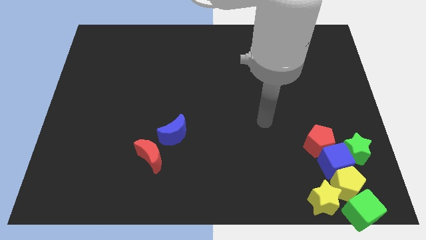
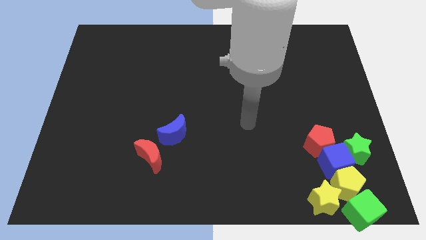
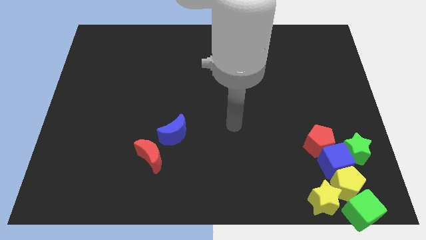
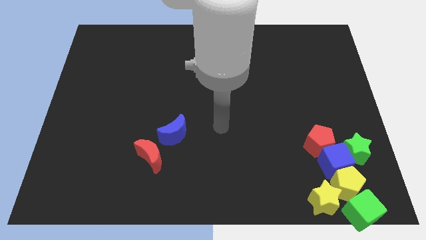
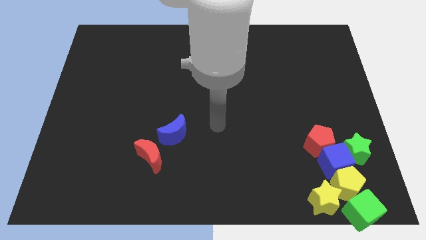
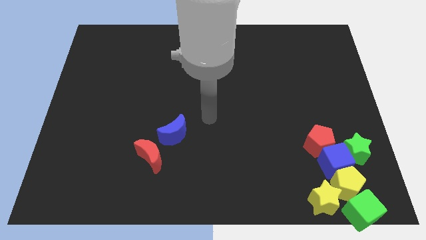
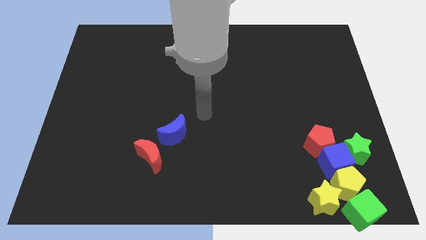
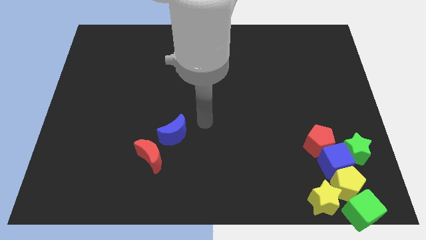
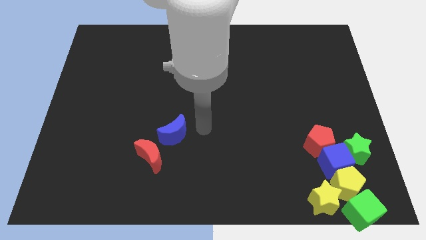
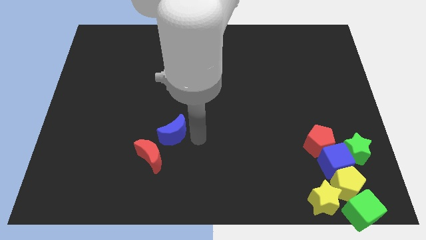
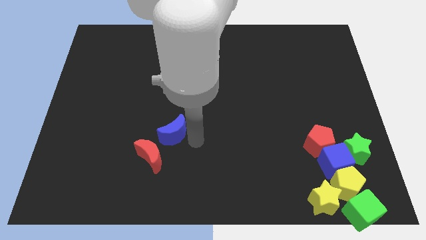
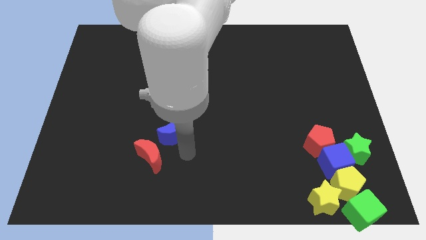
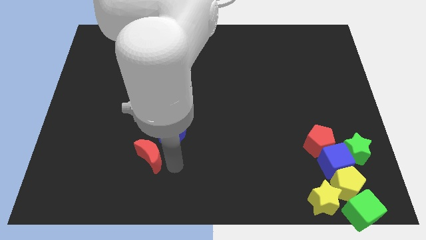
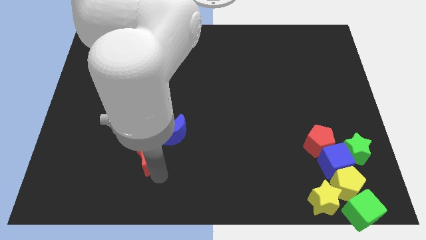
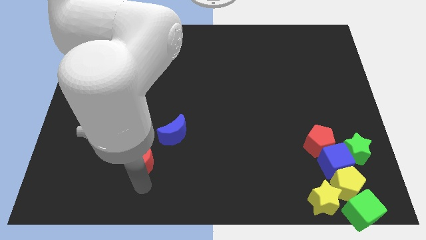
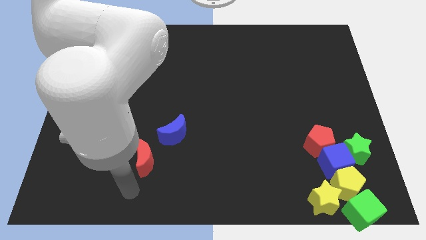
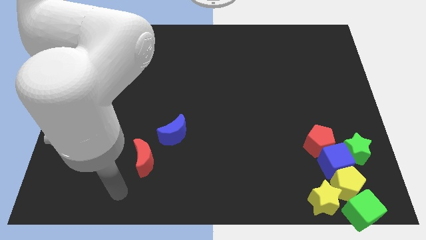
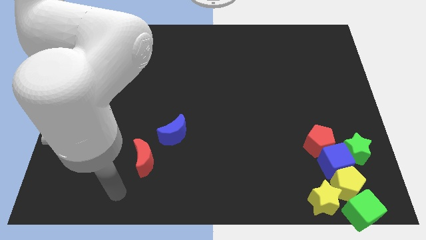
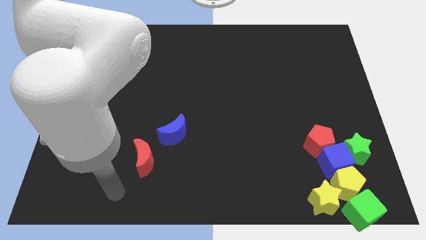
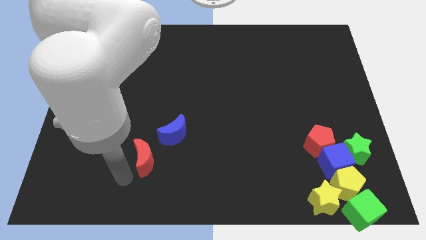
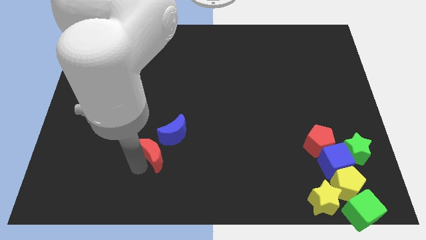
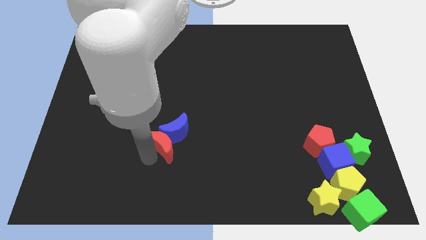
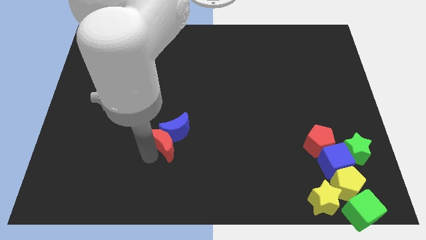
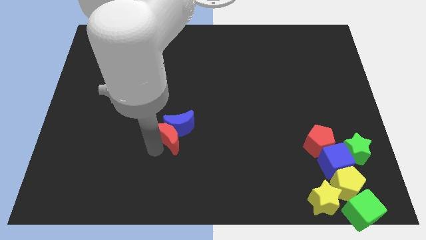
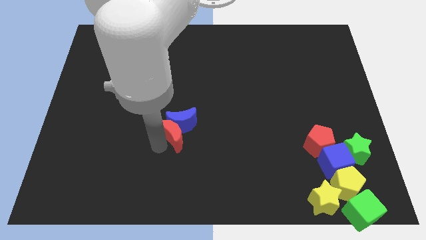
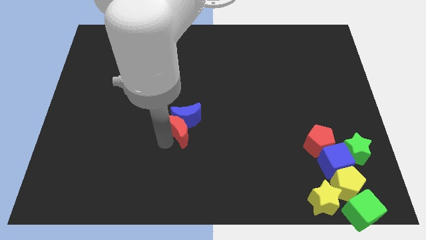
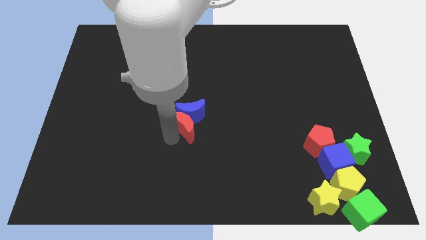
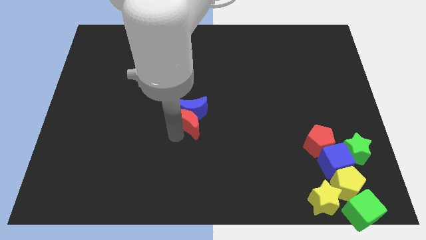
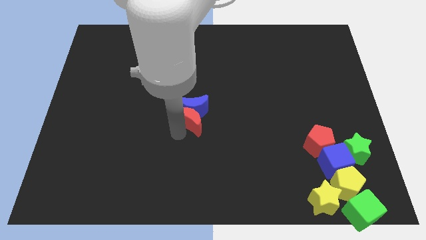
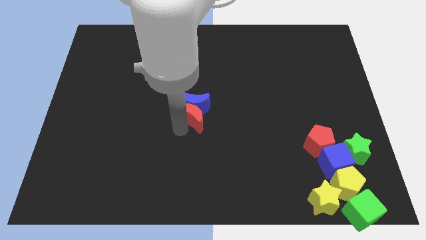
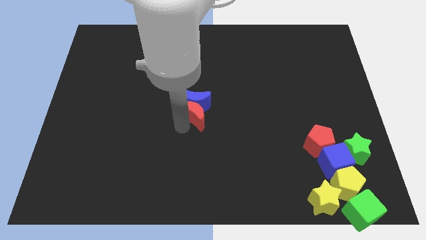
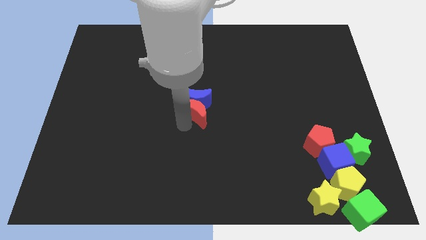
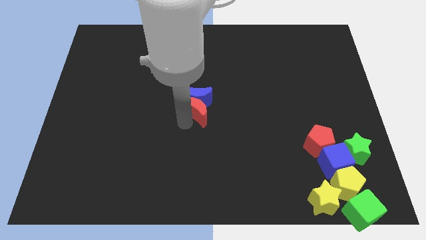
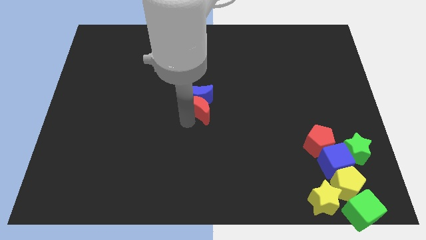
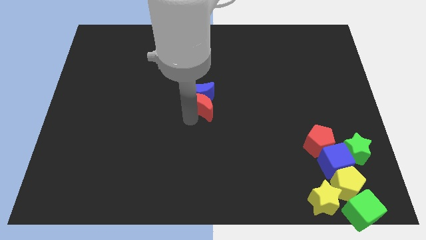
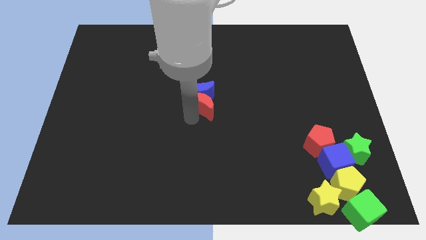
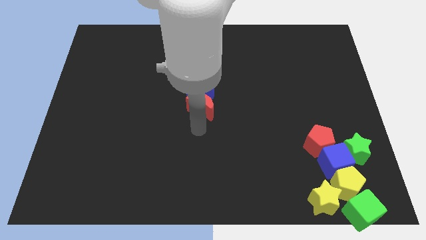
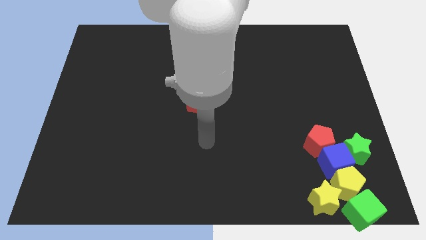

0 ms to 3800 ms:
push the red moon to the center of the board

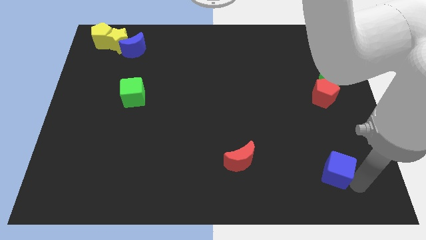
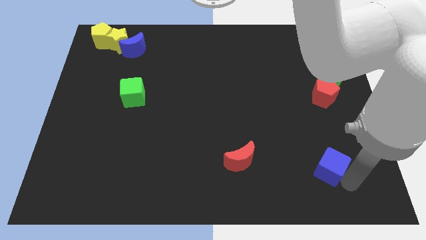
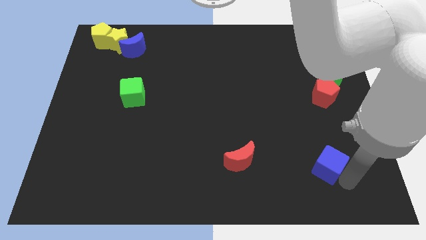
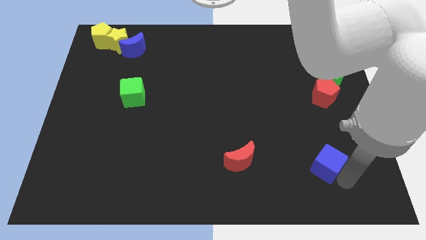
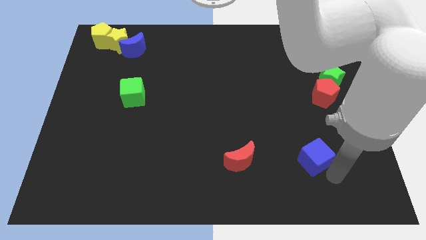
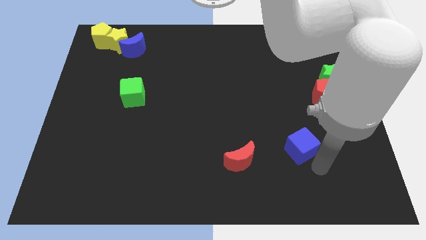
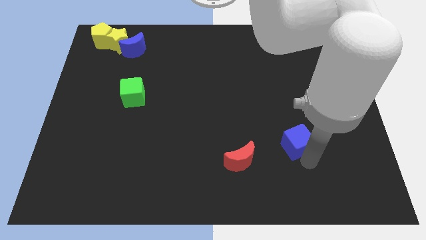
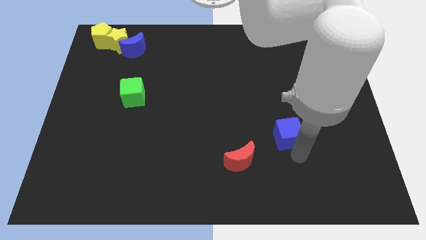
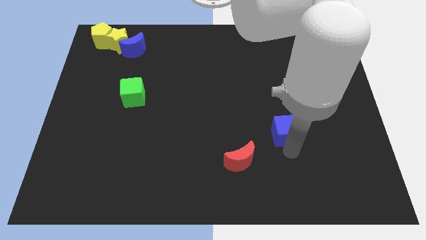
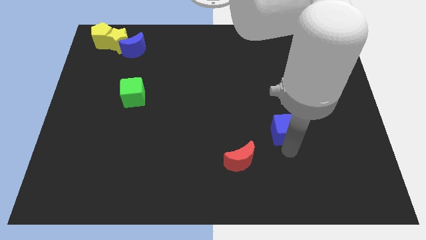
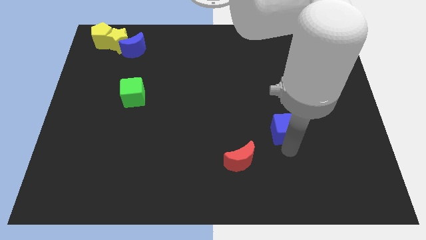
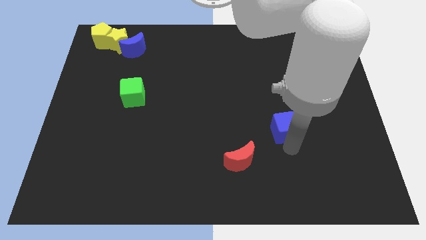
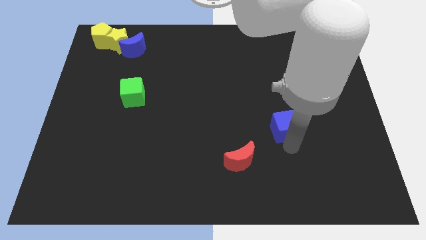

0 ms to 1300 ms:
place blue cube in between red moon and red pentagon

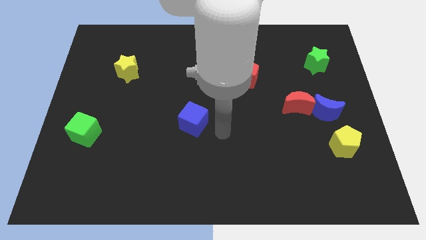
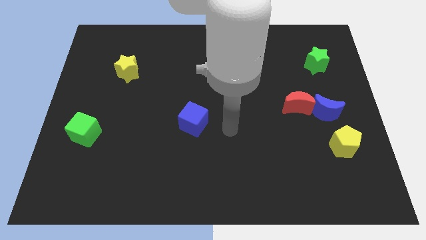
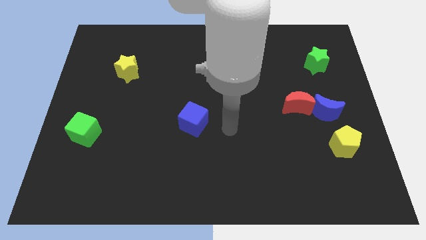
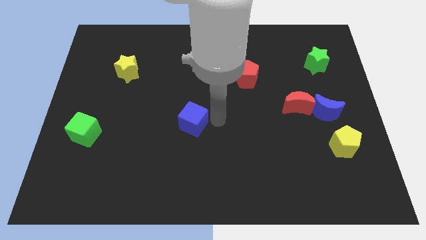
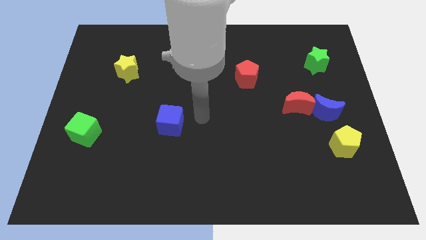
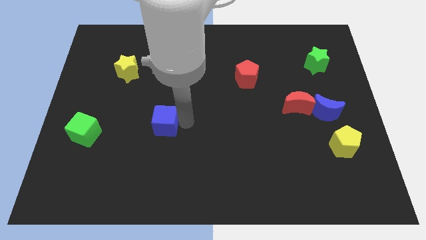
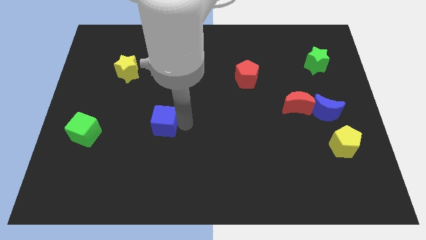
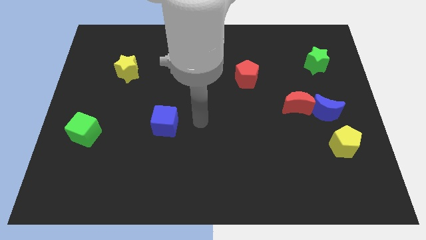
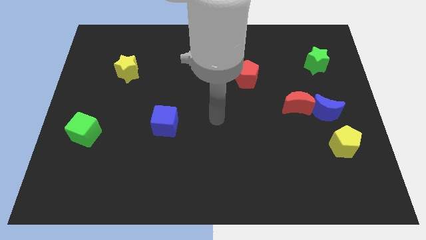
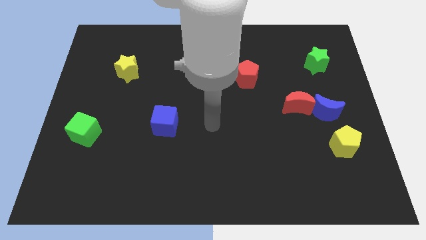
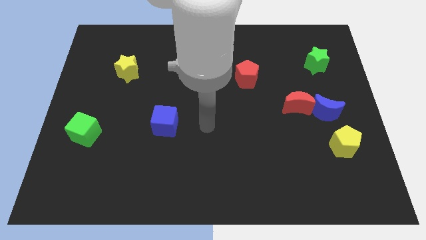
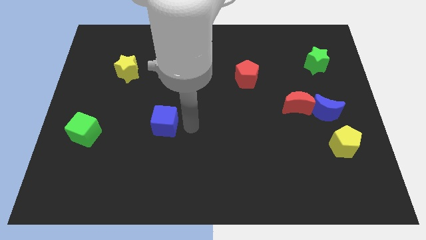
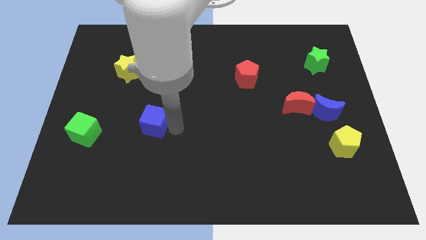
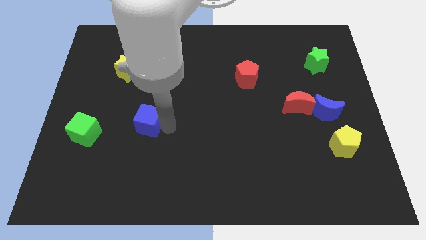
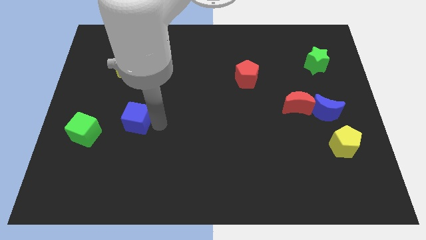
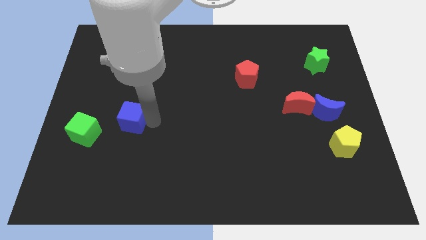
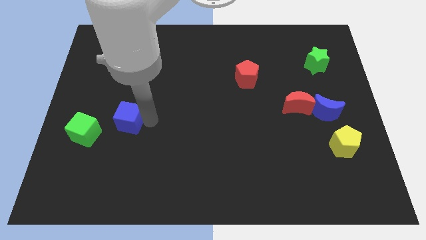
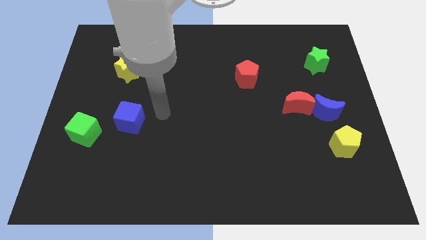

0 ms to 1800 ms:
push the blue cube to the bottom of the yellow star

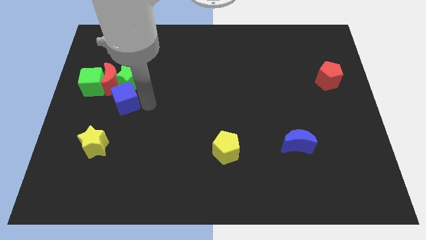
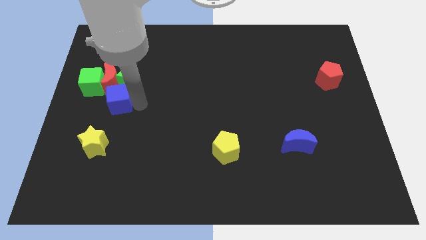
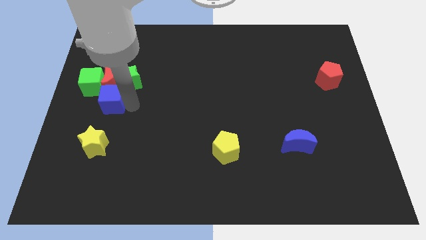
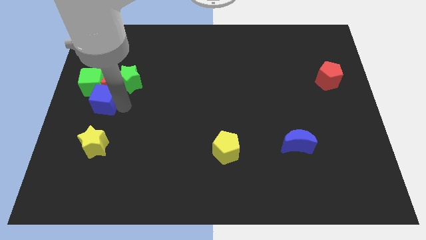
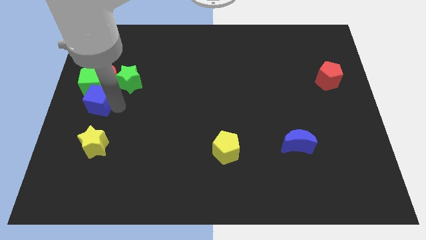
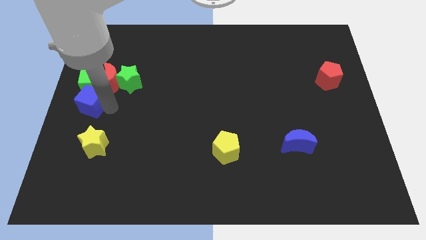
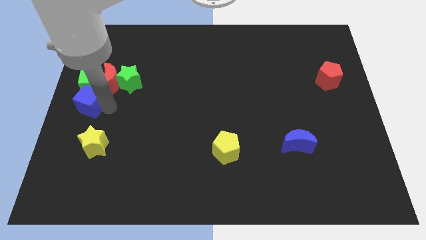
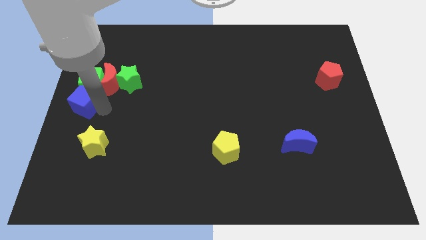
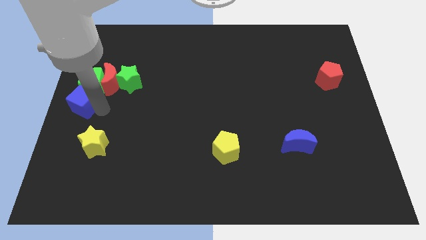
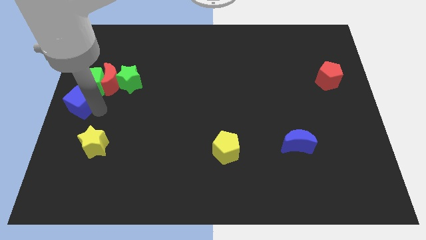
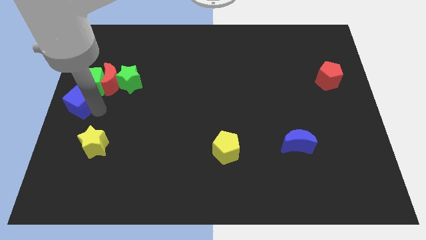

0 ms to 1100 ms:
move the blue cube down to the green cube

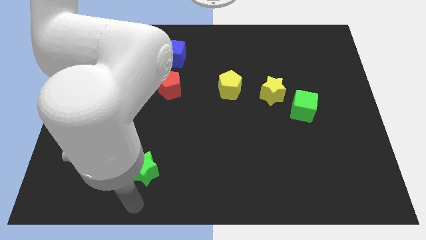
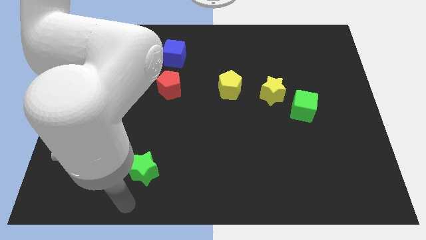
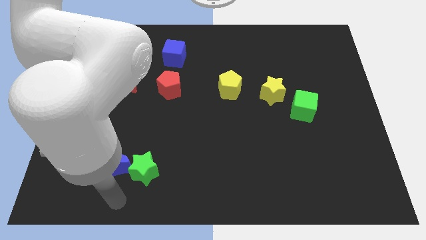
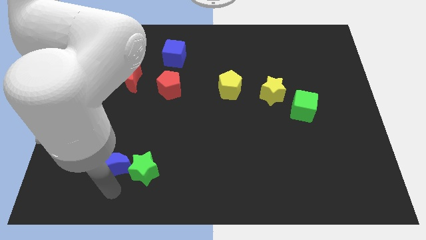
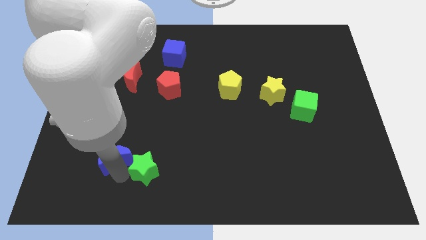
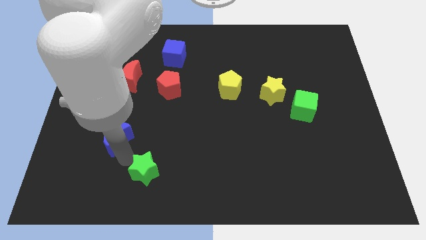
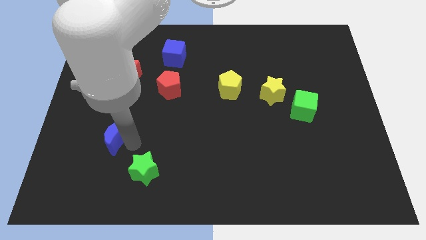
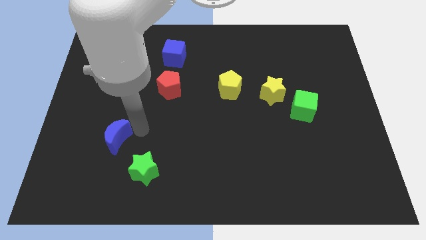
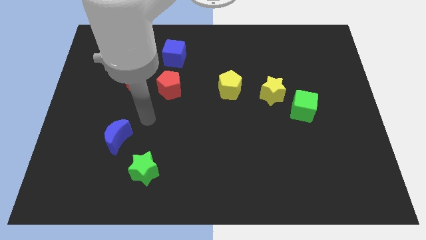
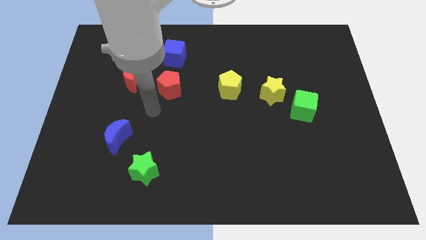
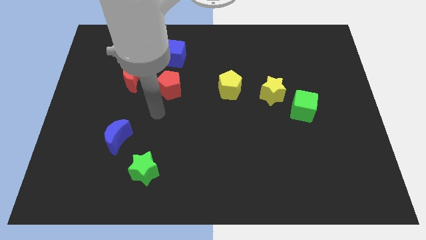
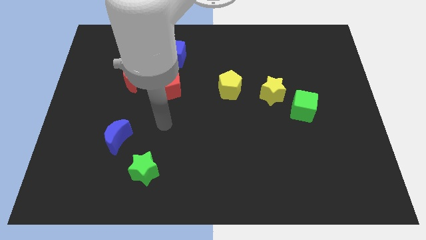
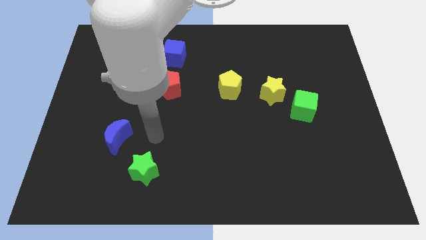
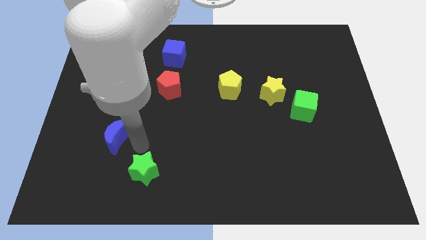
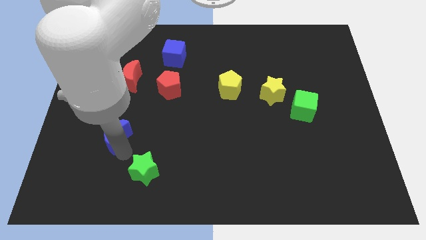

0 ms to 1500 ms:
separate the green star and blue crescent
